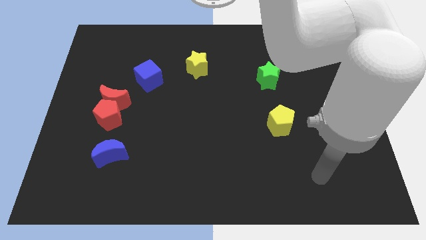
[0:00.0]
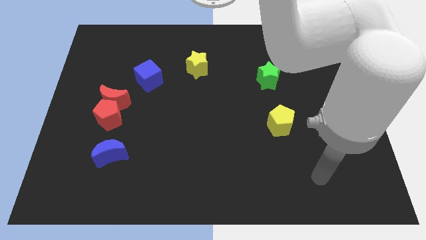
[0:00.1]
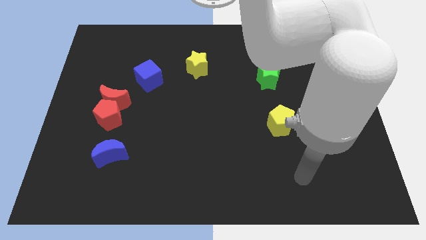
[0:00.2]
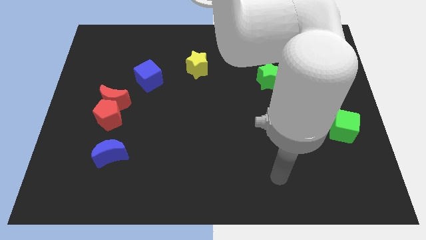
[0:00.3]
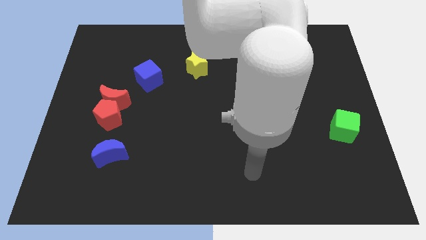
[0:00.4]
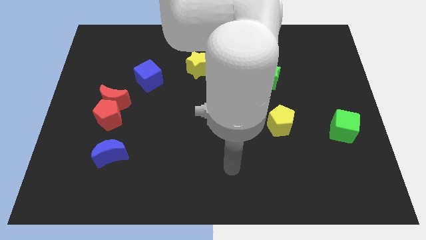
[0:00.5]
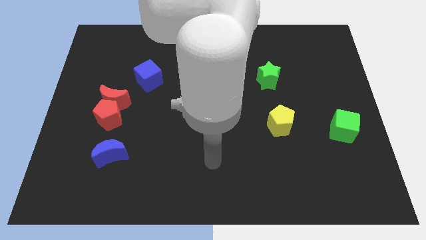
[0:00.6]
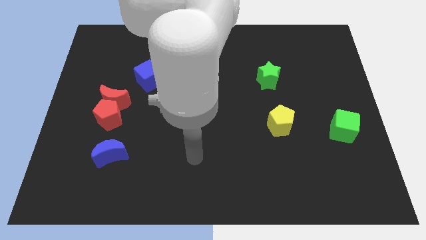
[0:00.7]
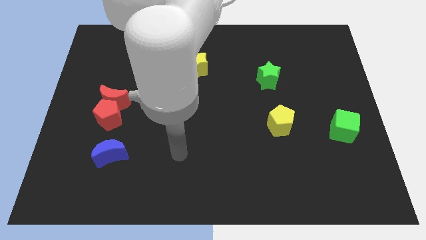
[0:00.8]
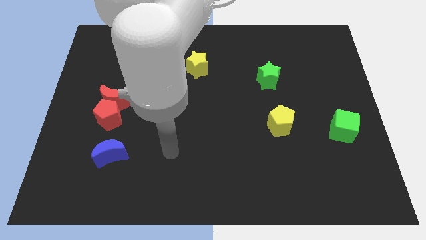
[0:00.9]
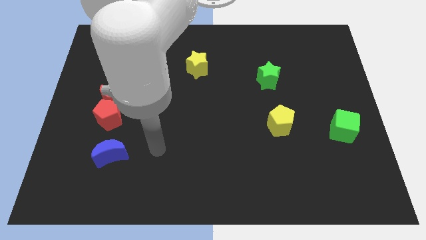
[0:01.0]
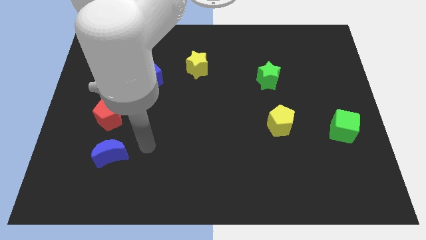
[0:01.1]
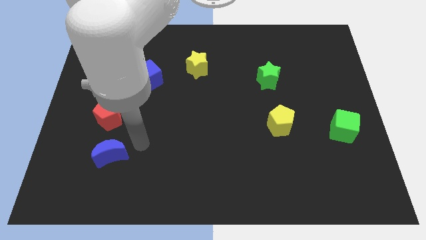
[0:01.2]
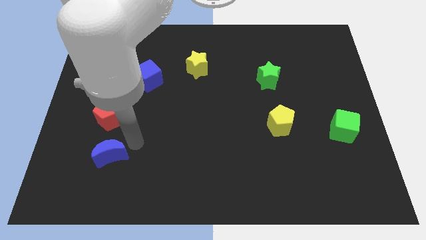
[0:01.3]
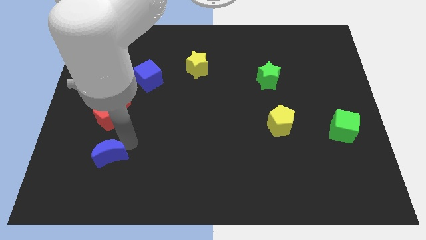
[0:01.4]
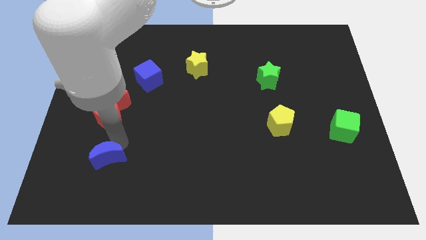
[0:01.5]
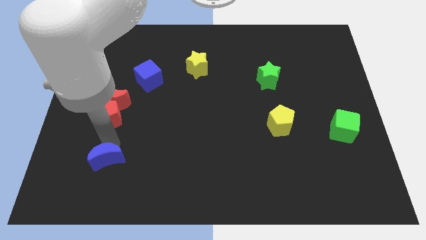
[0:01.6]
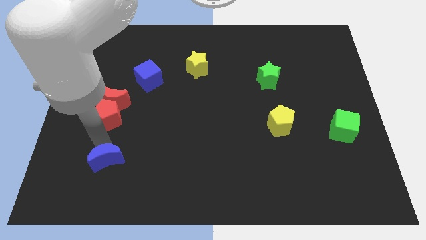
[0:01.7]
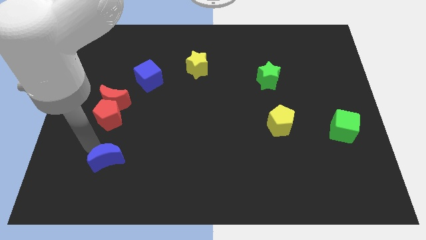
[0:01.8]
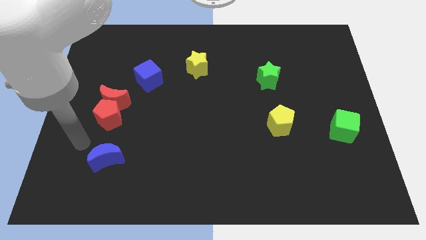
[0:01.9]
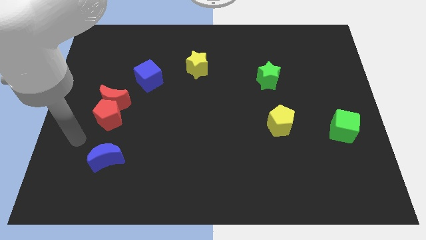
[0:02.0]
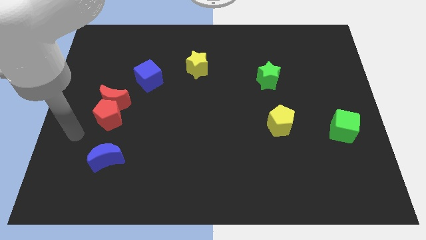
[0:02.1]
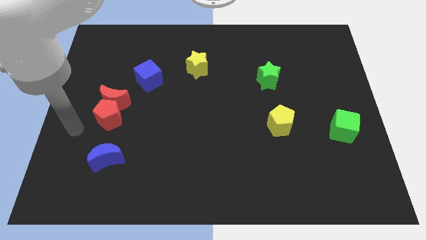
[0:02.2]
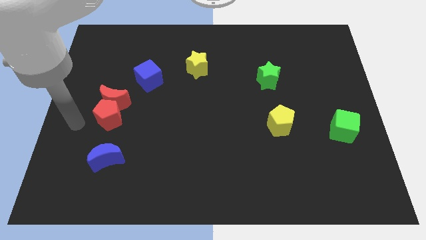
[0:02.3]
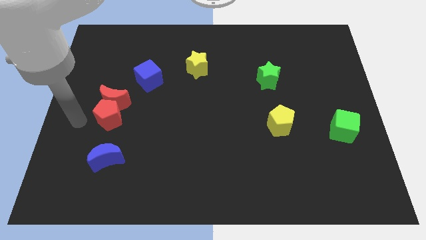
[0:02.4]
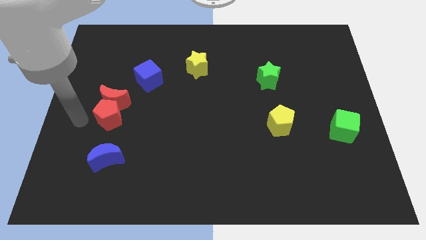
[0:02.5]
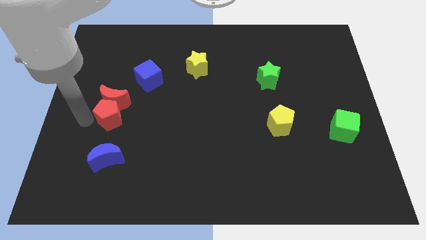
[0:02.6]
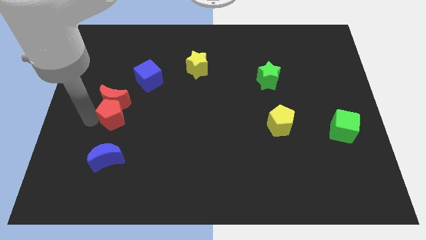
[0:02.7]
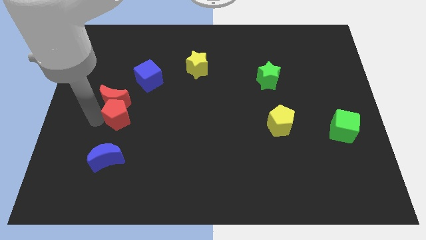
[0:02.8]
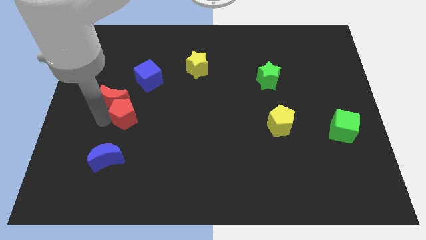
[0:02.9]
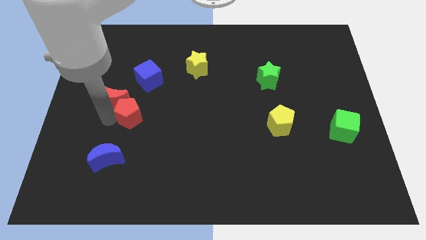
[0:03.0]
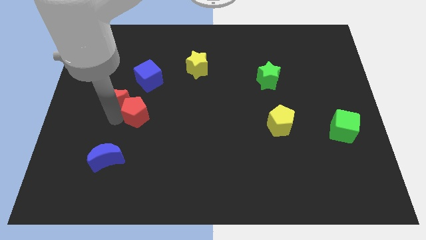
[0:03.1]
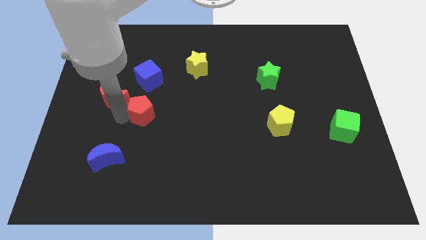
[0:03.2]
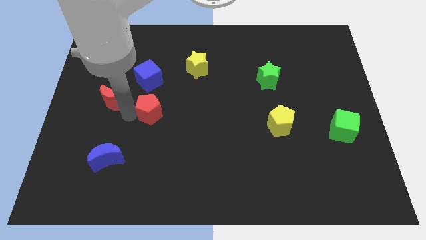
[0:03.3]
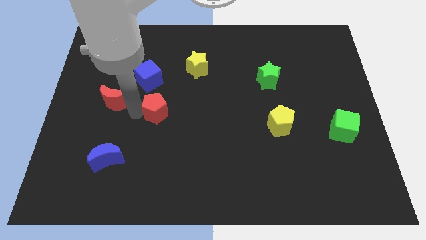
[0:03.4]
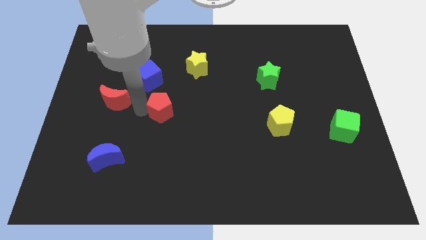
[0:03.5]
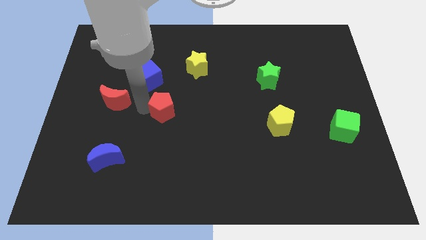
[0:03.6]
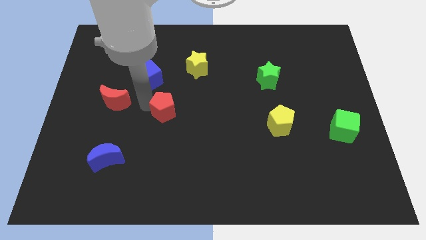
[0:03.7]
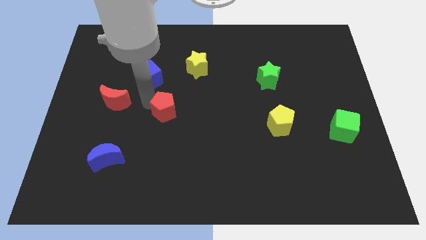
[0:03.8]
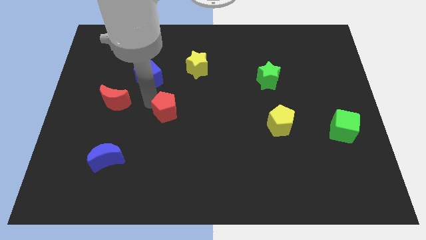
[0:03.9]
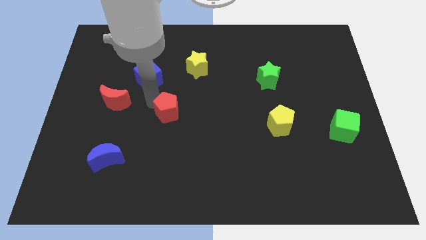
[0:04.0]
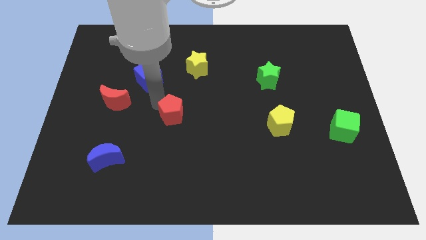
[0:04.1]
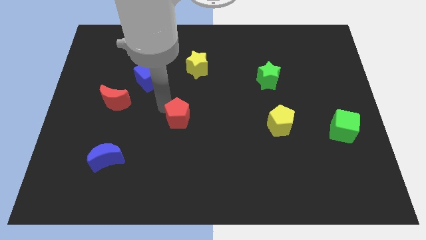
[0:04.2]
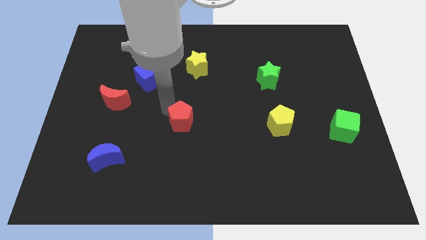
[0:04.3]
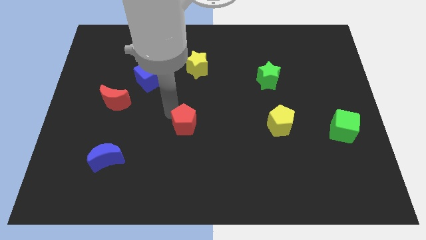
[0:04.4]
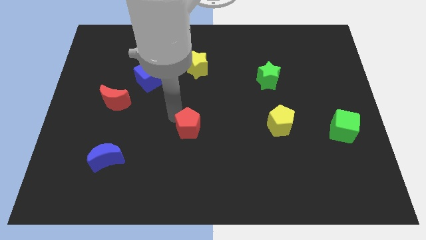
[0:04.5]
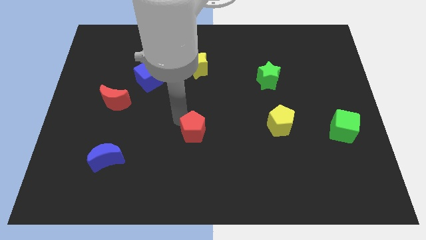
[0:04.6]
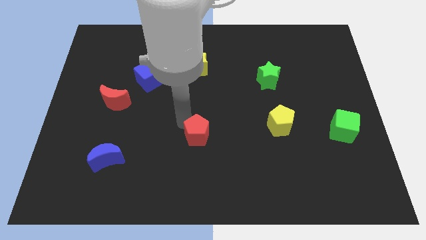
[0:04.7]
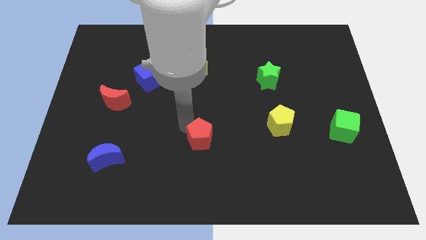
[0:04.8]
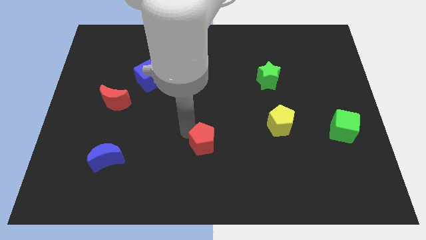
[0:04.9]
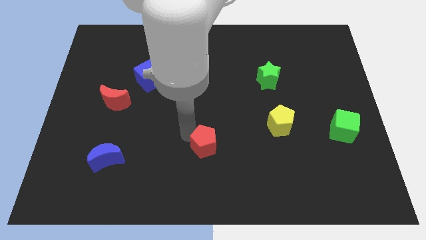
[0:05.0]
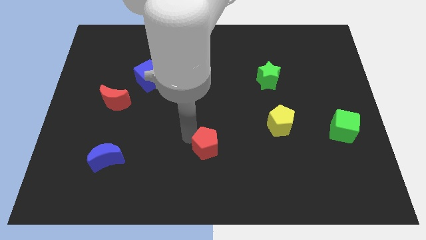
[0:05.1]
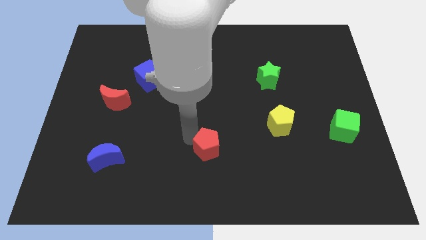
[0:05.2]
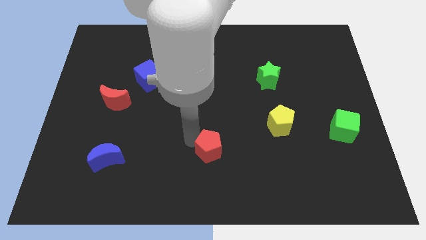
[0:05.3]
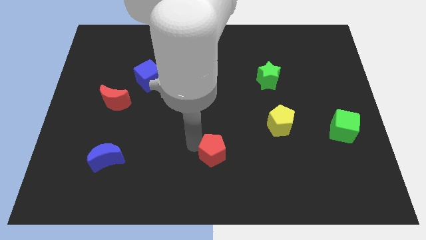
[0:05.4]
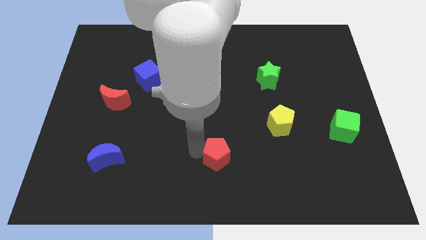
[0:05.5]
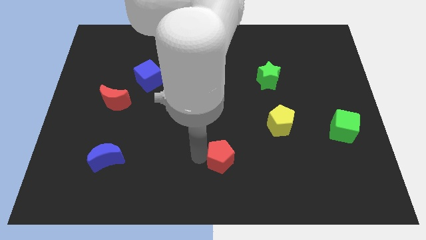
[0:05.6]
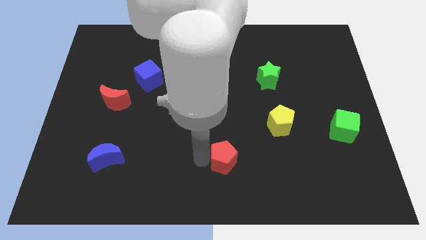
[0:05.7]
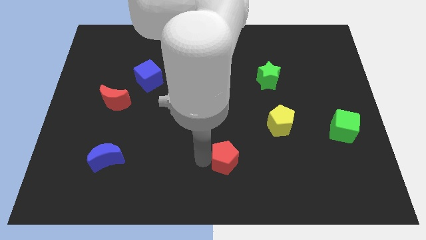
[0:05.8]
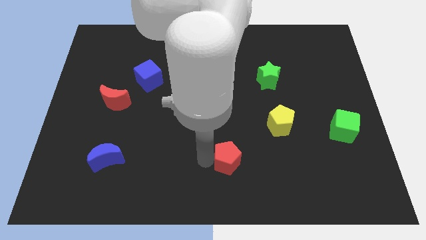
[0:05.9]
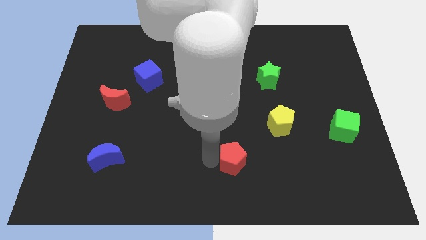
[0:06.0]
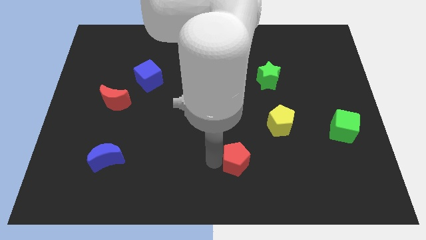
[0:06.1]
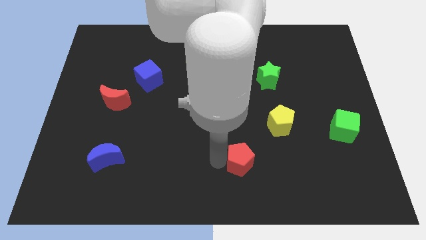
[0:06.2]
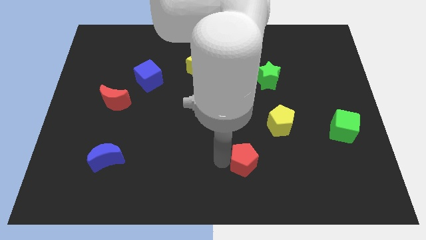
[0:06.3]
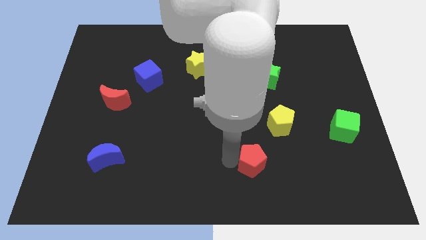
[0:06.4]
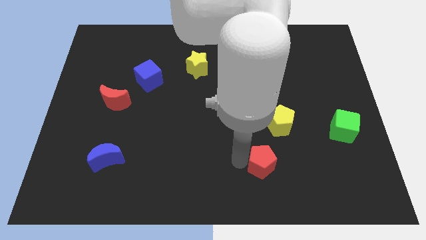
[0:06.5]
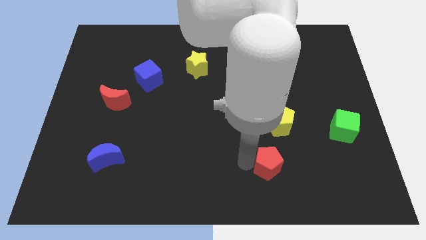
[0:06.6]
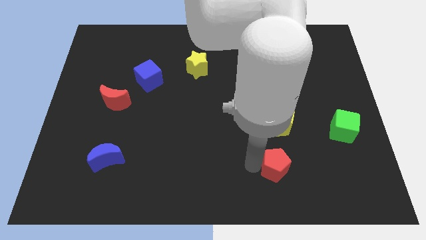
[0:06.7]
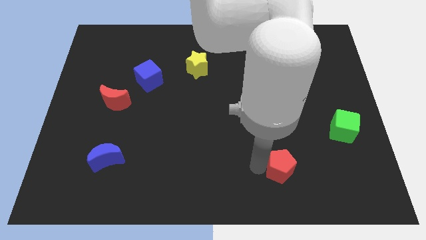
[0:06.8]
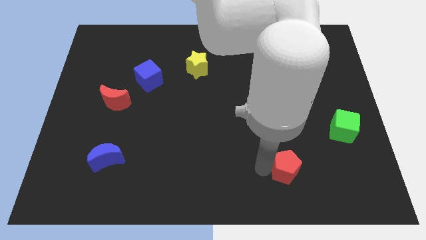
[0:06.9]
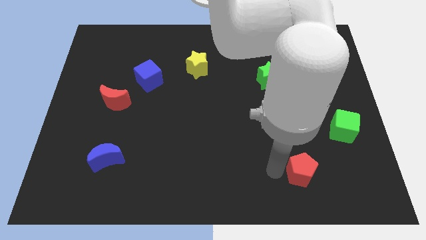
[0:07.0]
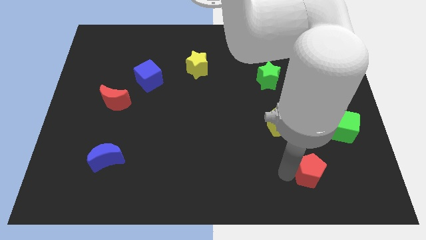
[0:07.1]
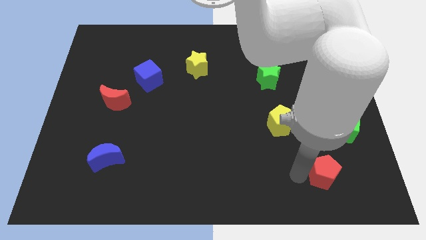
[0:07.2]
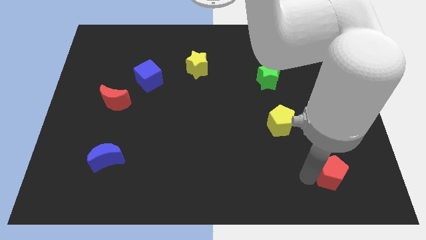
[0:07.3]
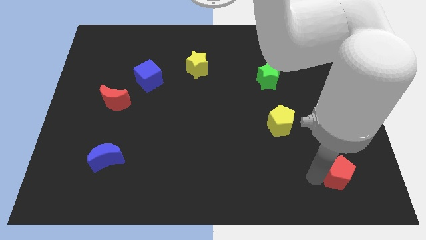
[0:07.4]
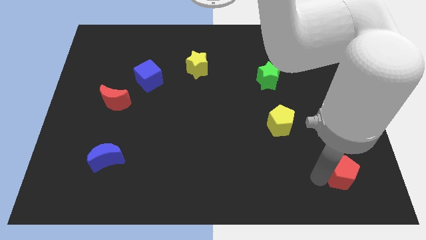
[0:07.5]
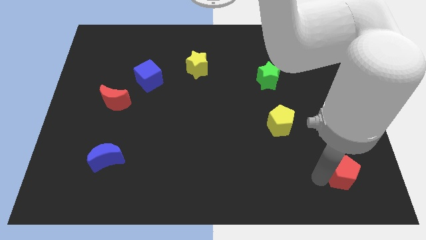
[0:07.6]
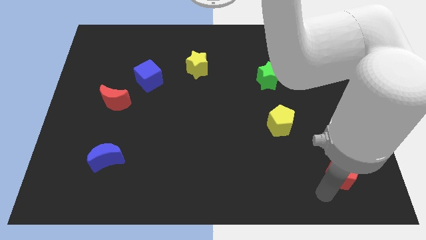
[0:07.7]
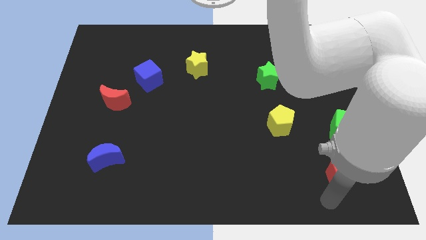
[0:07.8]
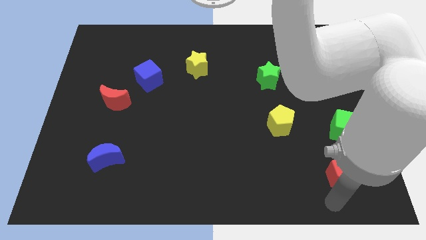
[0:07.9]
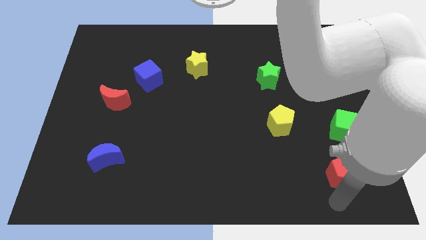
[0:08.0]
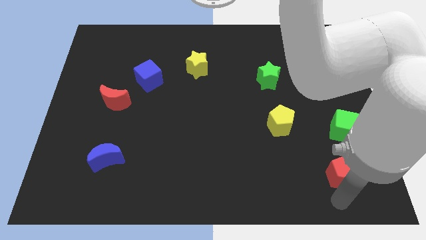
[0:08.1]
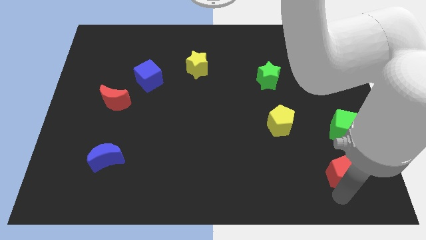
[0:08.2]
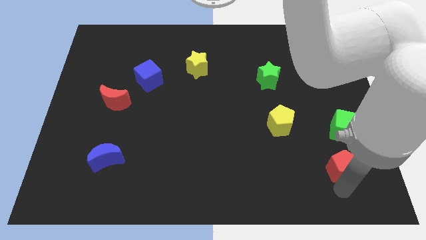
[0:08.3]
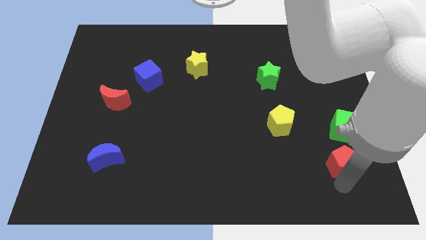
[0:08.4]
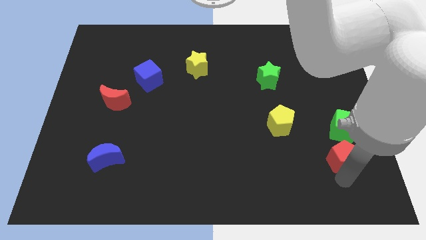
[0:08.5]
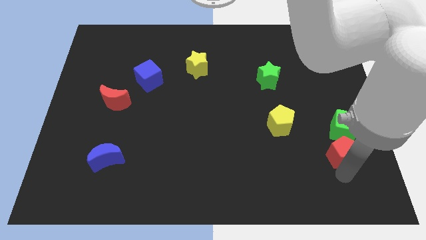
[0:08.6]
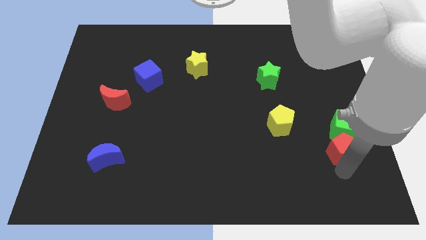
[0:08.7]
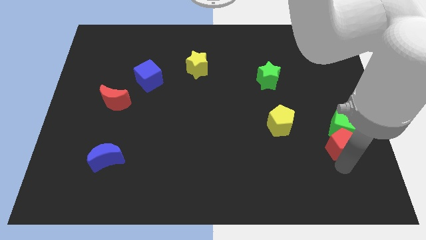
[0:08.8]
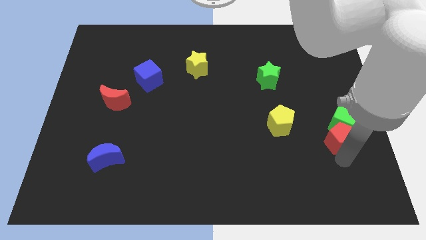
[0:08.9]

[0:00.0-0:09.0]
move the red pentagon next to the green cube
